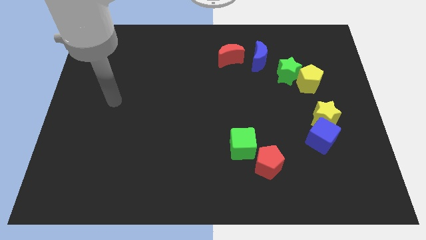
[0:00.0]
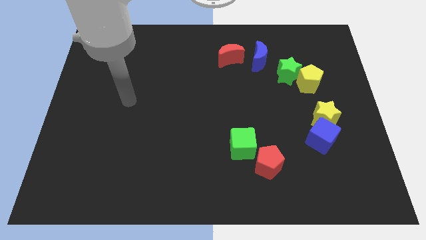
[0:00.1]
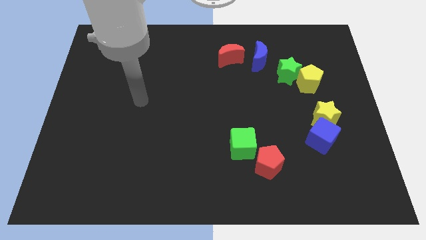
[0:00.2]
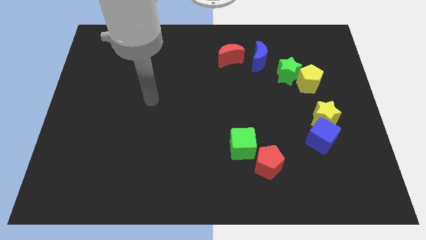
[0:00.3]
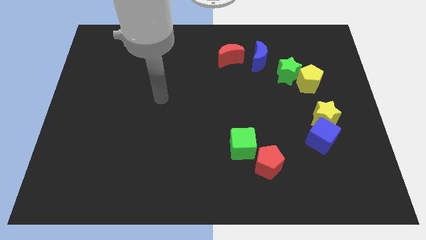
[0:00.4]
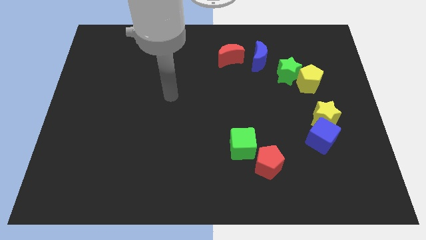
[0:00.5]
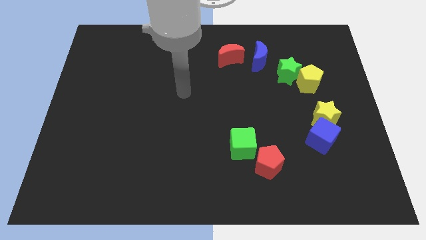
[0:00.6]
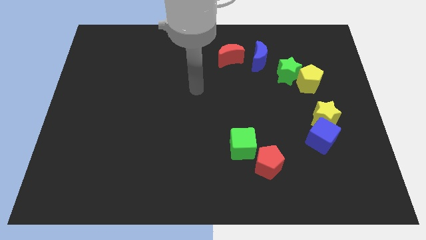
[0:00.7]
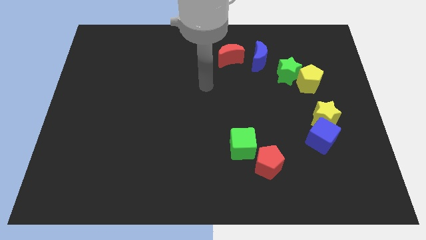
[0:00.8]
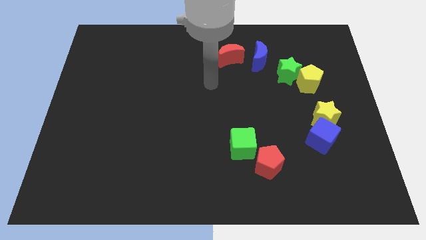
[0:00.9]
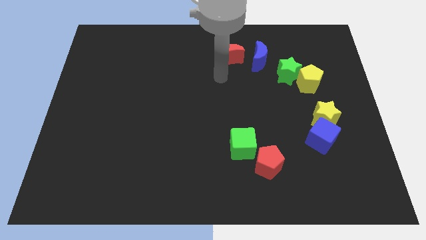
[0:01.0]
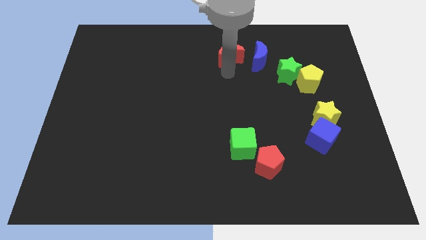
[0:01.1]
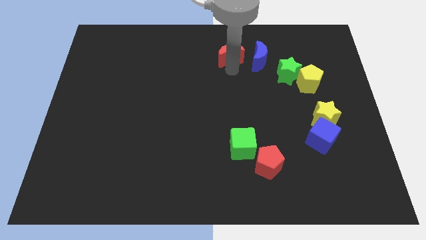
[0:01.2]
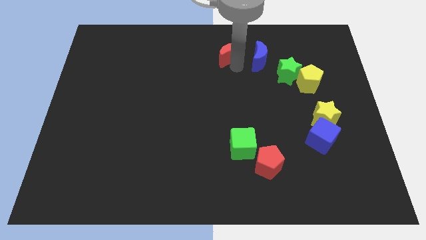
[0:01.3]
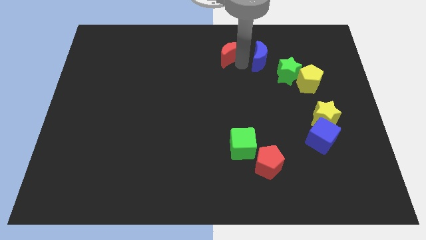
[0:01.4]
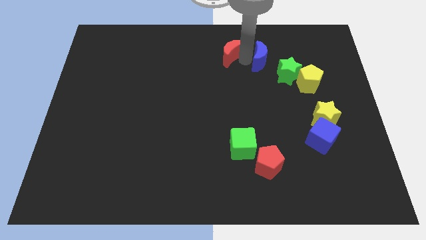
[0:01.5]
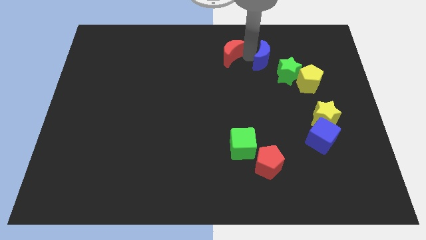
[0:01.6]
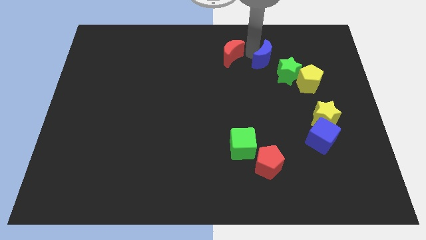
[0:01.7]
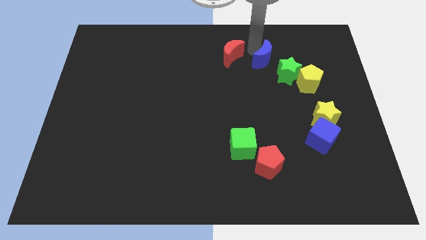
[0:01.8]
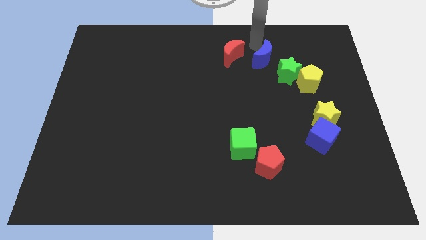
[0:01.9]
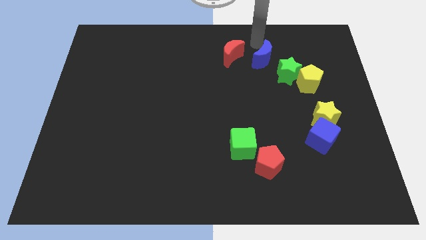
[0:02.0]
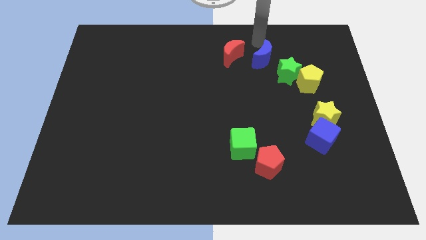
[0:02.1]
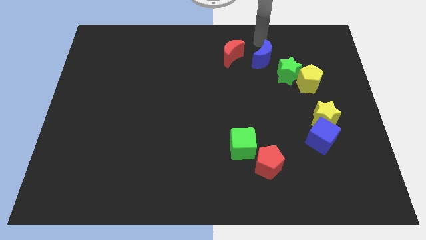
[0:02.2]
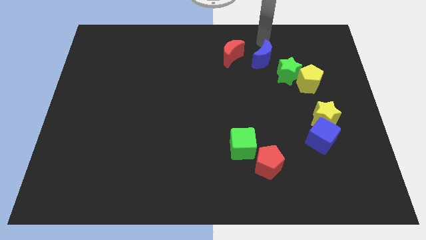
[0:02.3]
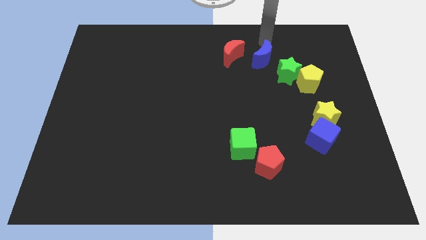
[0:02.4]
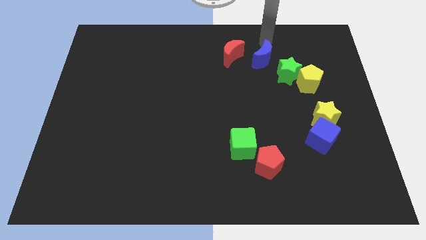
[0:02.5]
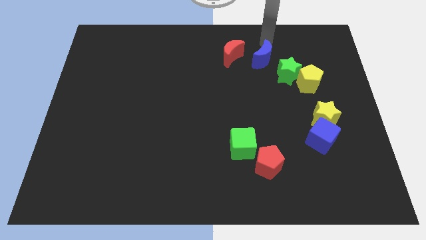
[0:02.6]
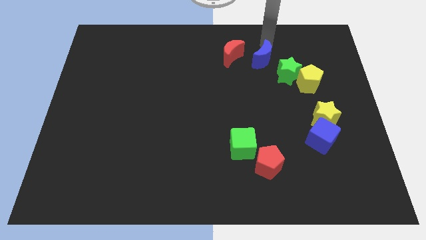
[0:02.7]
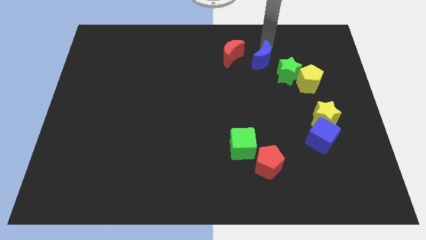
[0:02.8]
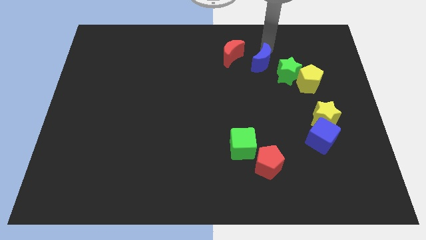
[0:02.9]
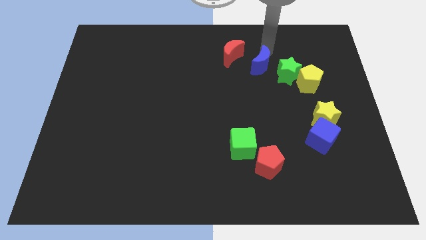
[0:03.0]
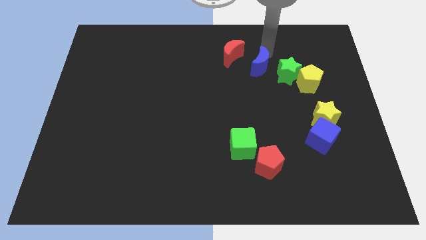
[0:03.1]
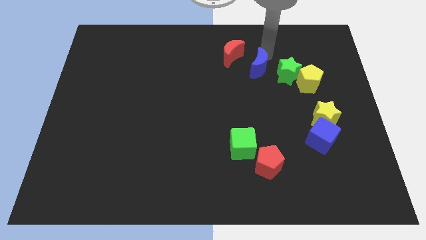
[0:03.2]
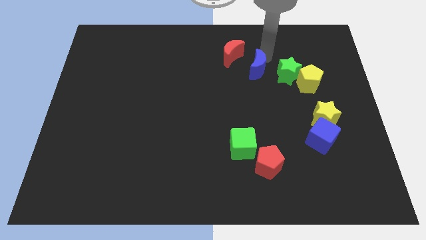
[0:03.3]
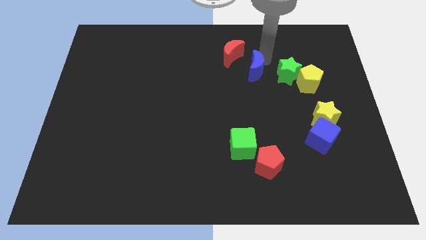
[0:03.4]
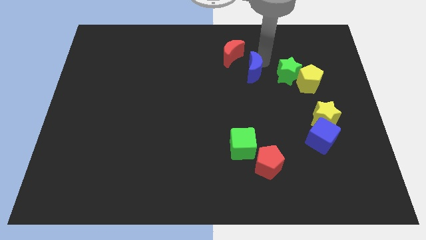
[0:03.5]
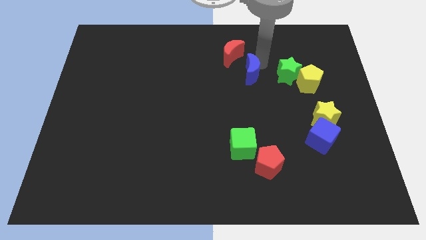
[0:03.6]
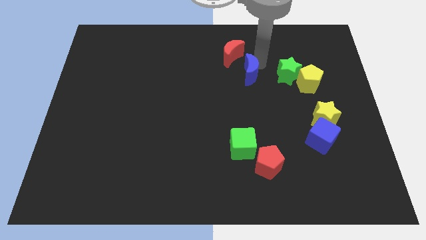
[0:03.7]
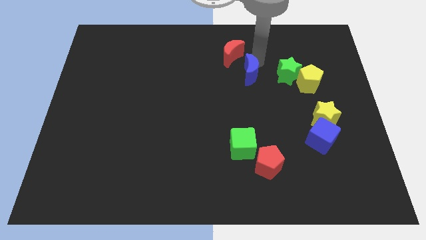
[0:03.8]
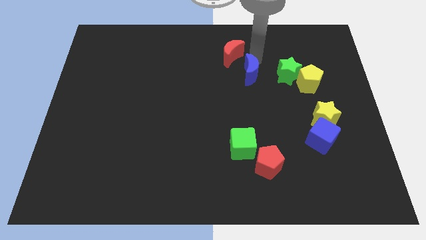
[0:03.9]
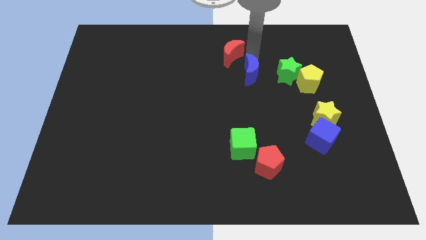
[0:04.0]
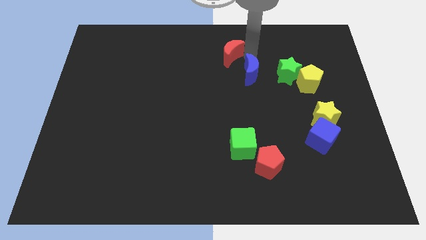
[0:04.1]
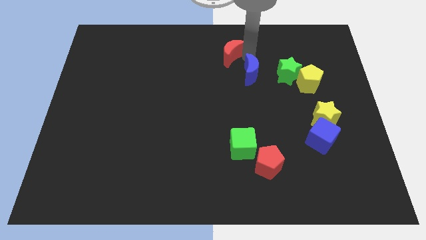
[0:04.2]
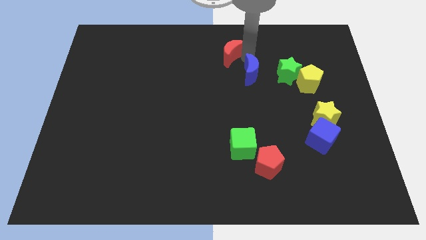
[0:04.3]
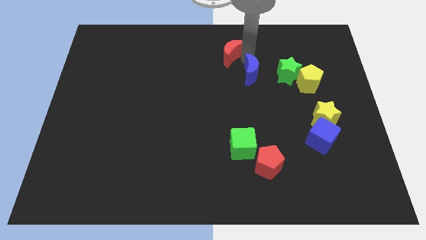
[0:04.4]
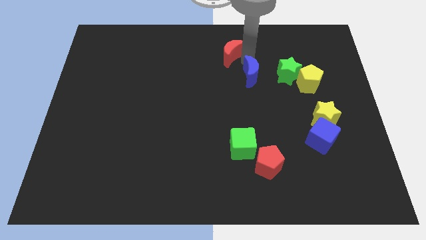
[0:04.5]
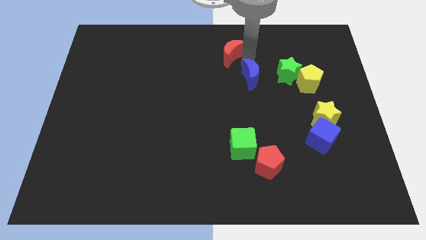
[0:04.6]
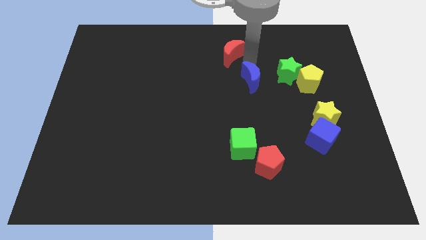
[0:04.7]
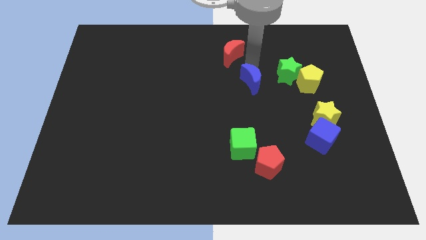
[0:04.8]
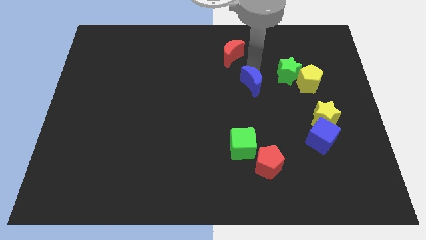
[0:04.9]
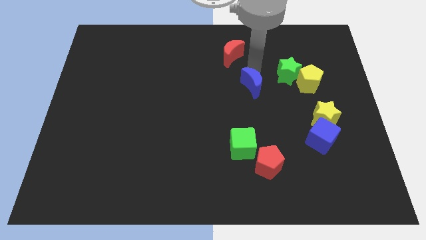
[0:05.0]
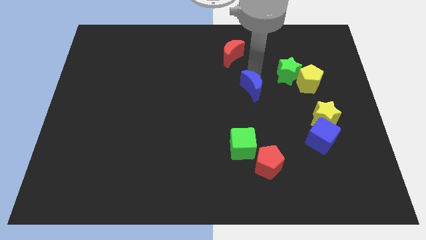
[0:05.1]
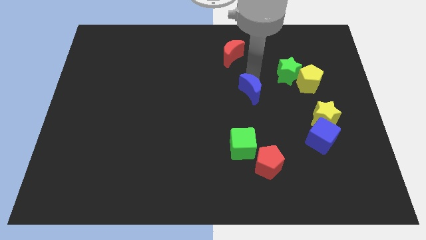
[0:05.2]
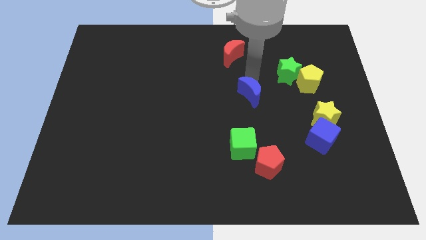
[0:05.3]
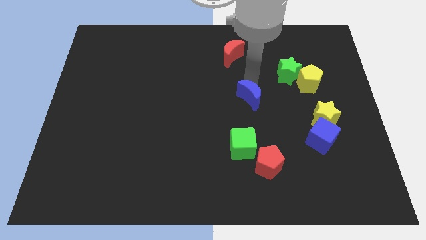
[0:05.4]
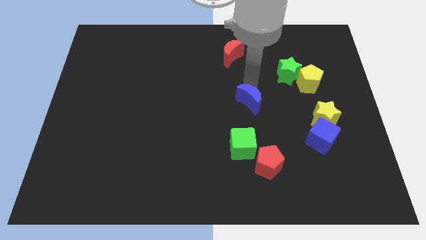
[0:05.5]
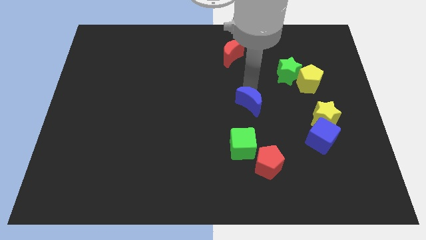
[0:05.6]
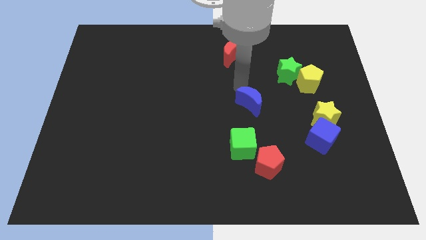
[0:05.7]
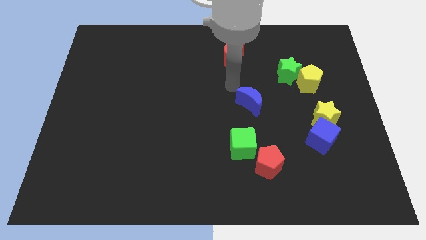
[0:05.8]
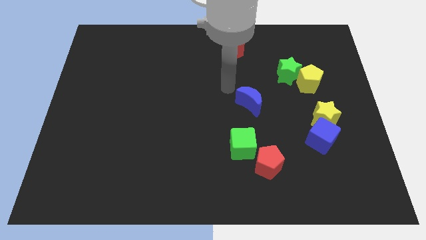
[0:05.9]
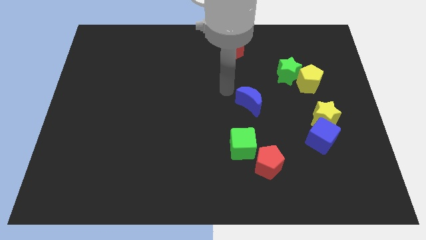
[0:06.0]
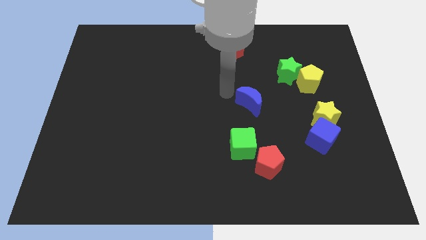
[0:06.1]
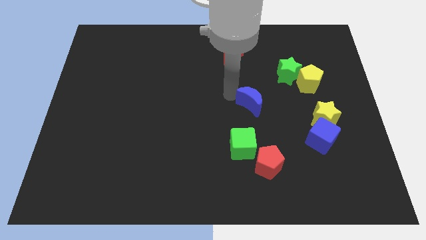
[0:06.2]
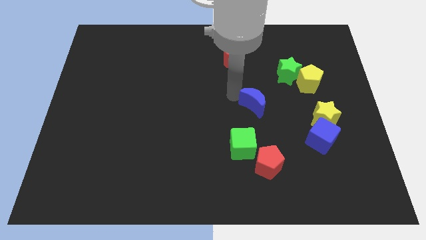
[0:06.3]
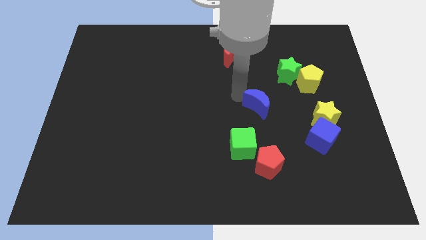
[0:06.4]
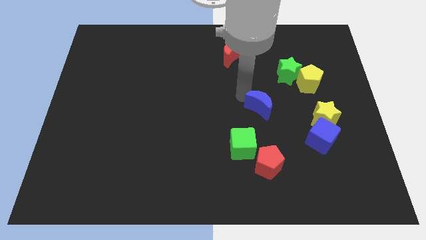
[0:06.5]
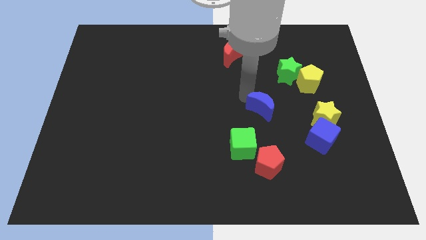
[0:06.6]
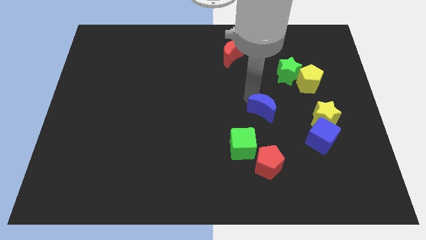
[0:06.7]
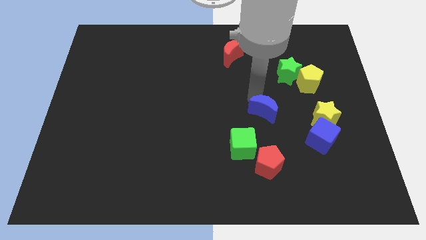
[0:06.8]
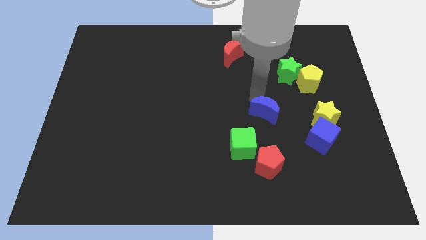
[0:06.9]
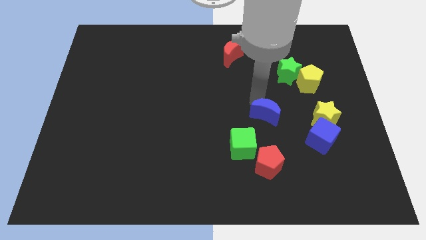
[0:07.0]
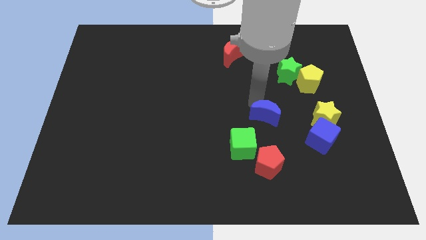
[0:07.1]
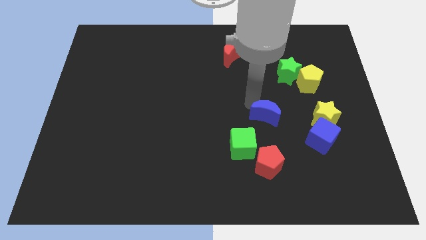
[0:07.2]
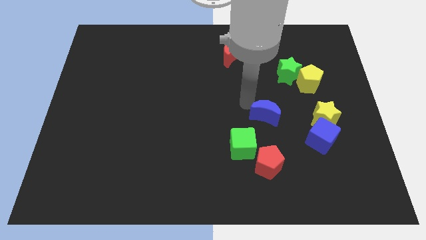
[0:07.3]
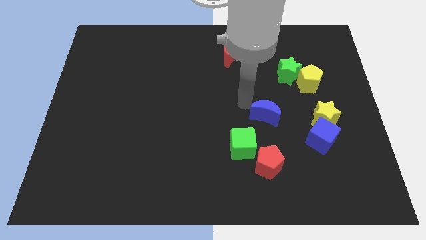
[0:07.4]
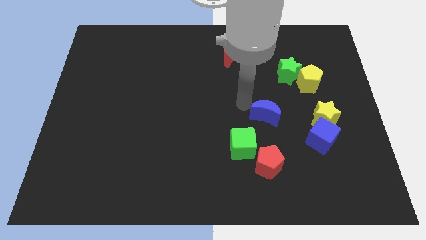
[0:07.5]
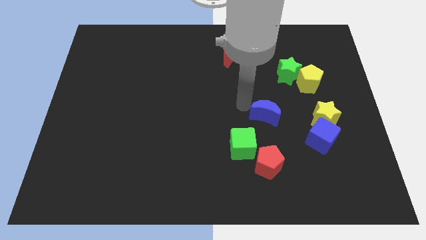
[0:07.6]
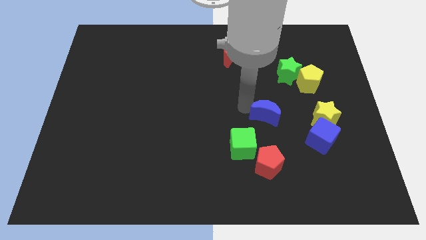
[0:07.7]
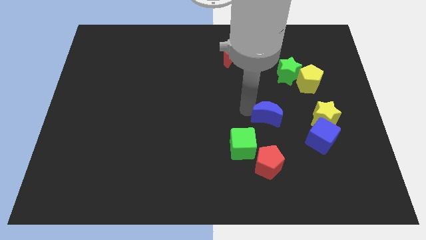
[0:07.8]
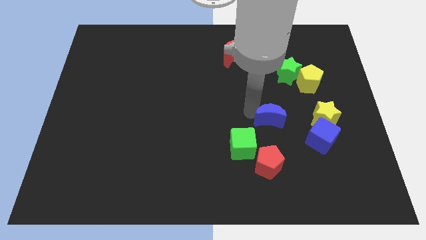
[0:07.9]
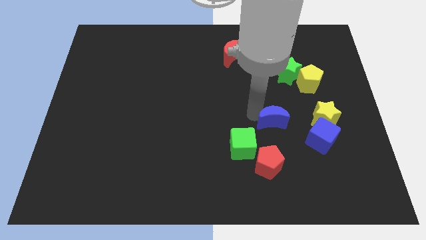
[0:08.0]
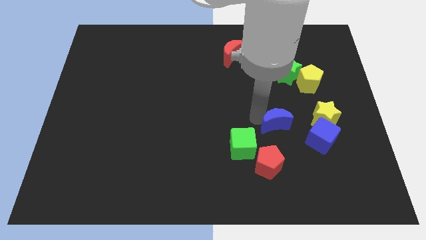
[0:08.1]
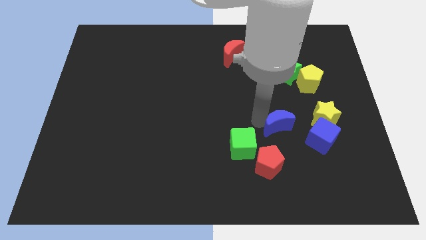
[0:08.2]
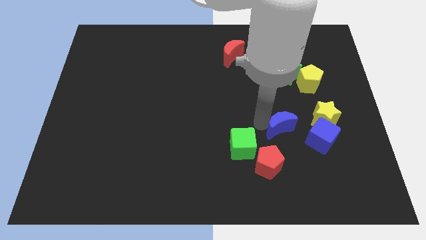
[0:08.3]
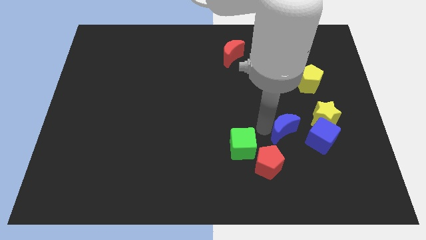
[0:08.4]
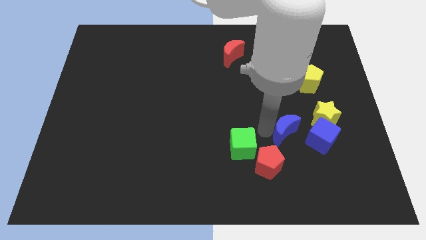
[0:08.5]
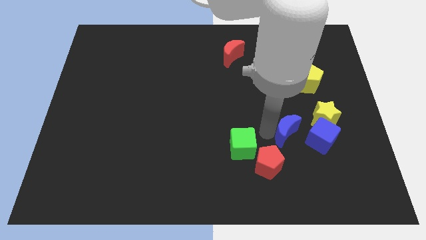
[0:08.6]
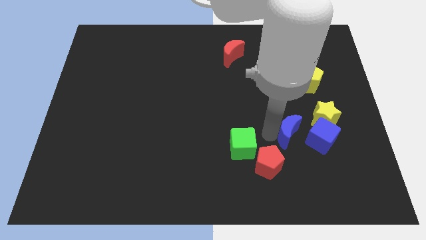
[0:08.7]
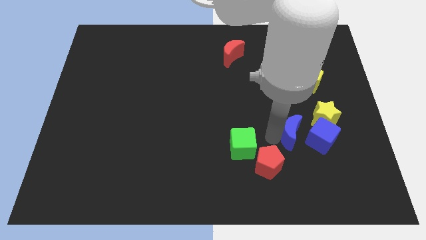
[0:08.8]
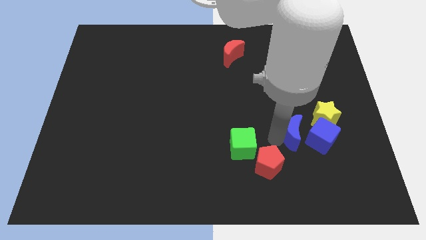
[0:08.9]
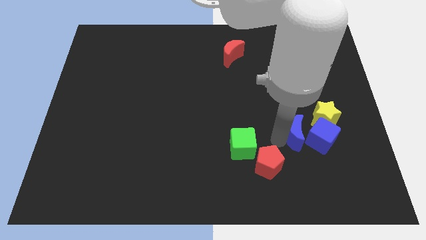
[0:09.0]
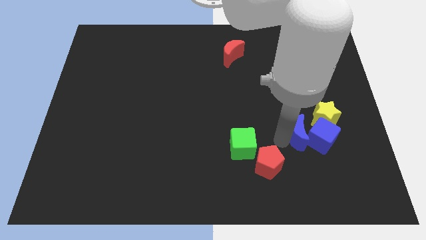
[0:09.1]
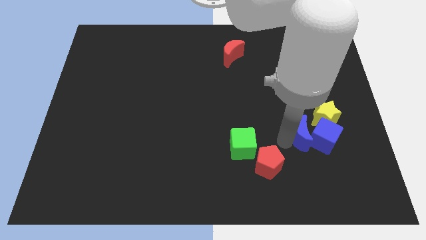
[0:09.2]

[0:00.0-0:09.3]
put the blue moon towards the blue cube
